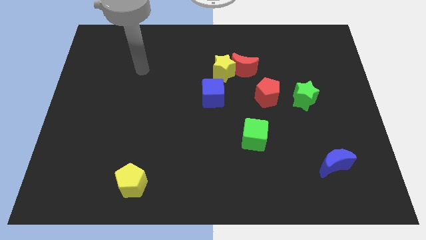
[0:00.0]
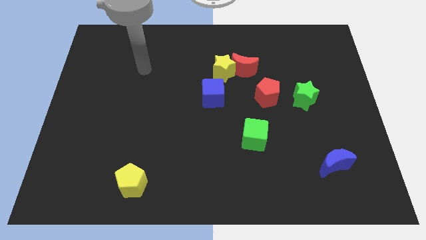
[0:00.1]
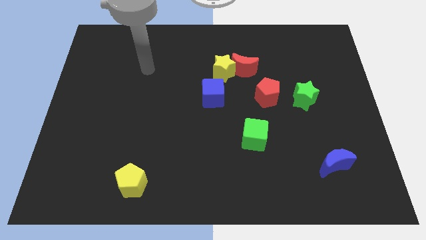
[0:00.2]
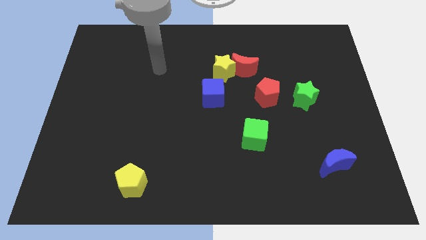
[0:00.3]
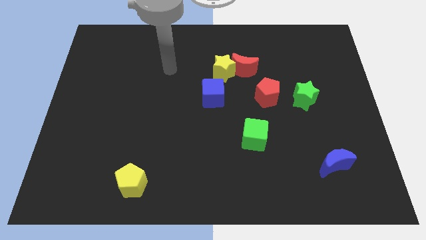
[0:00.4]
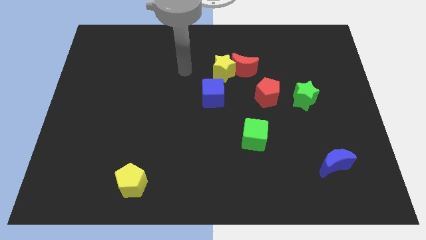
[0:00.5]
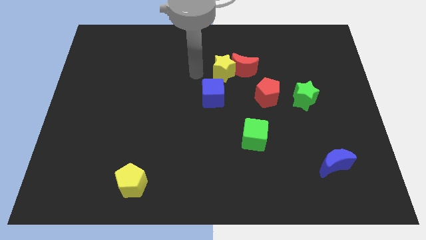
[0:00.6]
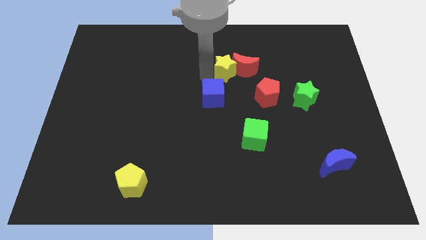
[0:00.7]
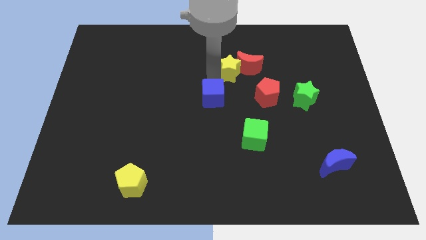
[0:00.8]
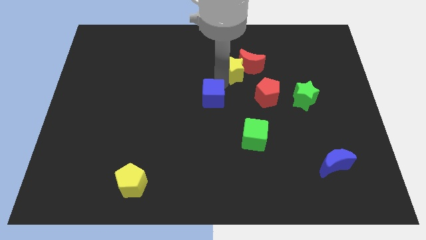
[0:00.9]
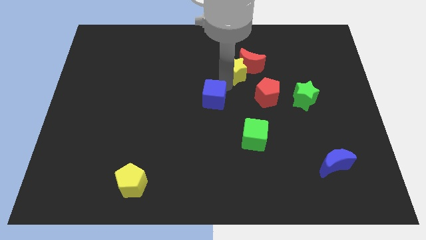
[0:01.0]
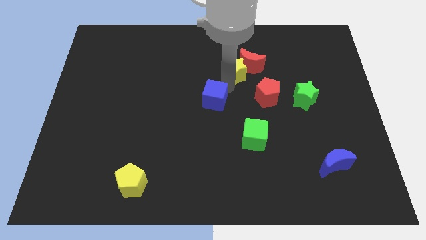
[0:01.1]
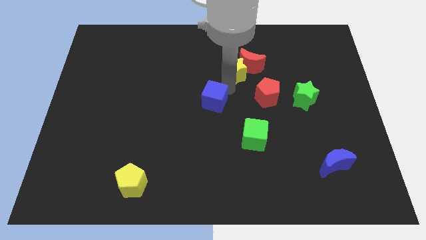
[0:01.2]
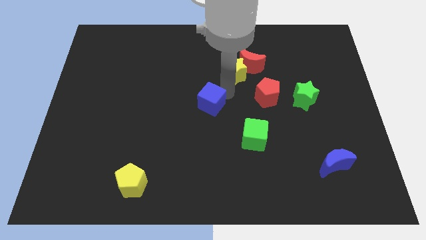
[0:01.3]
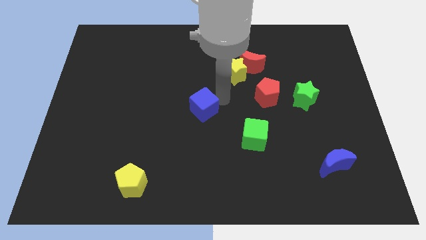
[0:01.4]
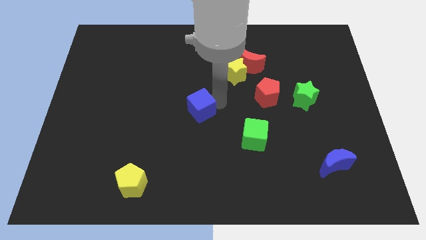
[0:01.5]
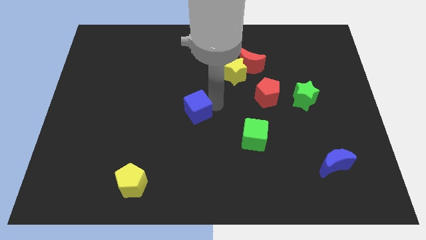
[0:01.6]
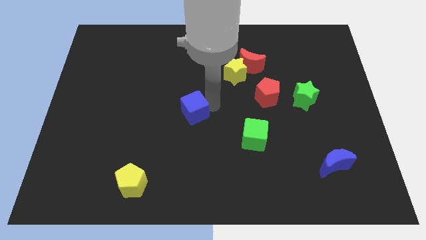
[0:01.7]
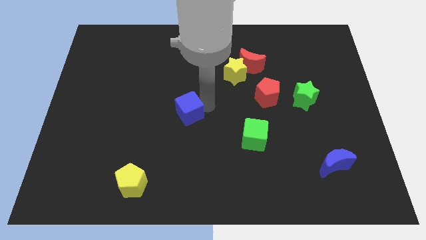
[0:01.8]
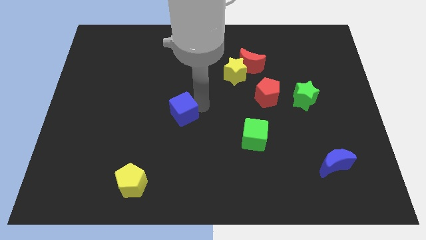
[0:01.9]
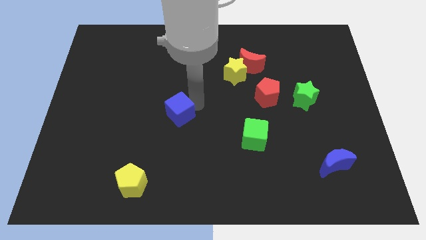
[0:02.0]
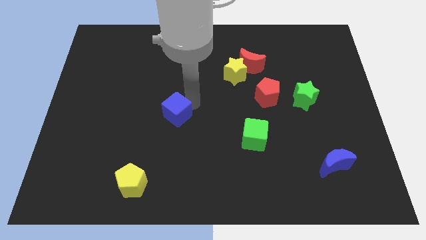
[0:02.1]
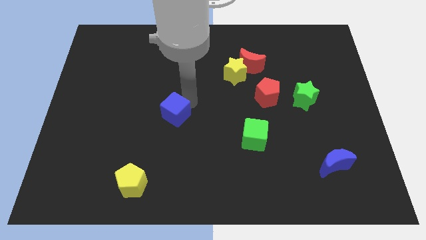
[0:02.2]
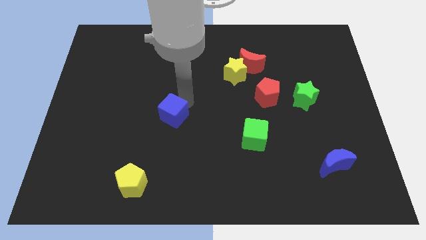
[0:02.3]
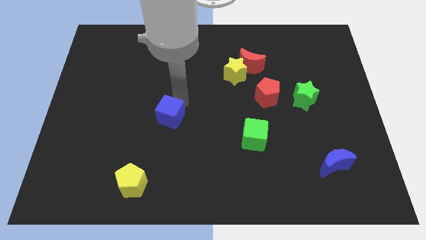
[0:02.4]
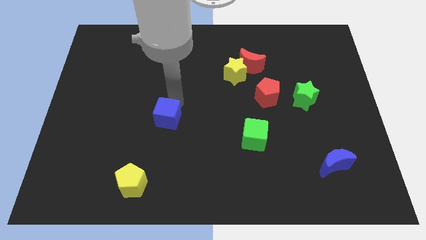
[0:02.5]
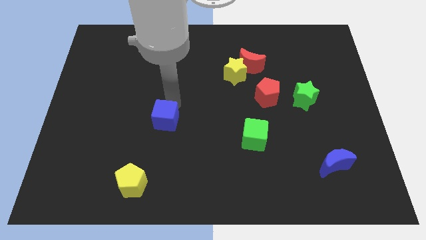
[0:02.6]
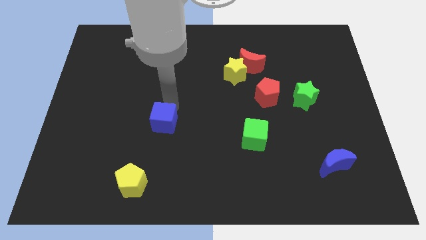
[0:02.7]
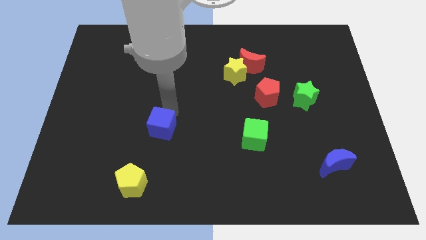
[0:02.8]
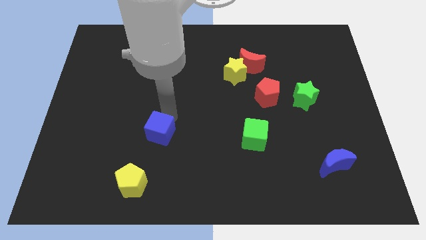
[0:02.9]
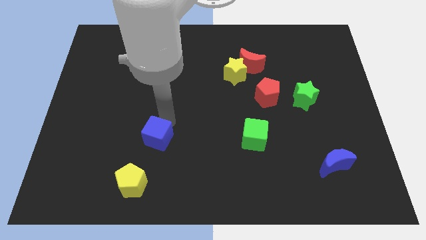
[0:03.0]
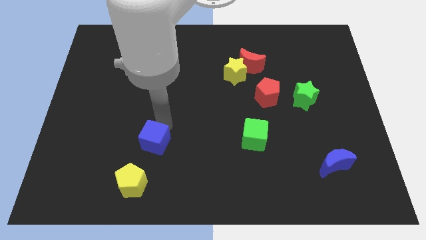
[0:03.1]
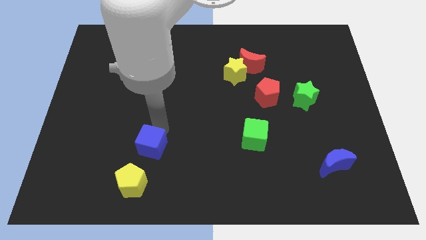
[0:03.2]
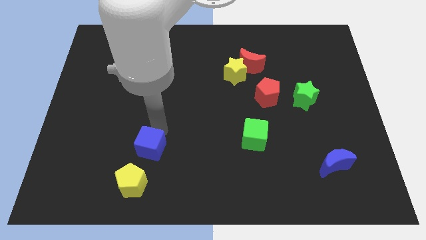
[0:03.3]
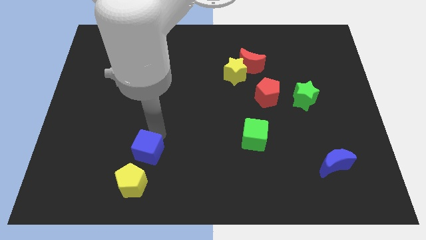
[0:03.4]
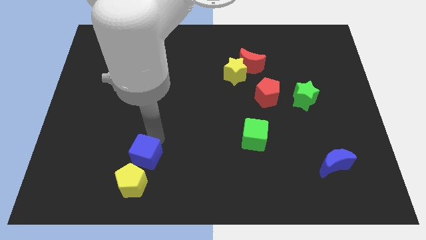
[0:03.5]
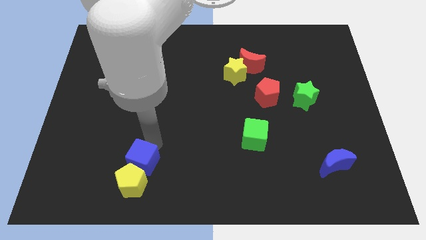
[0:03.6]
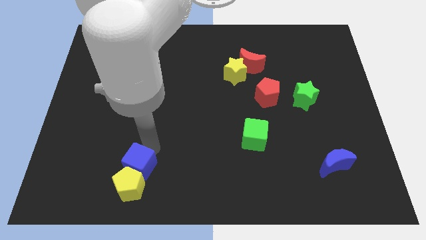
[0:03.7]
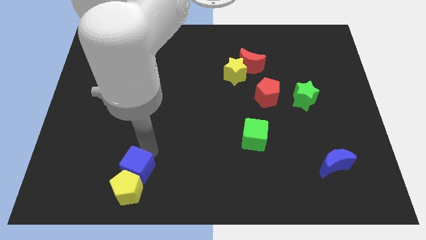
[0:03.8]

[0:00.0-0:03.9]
move the blue cube close to the yellow pentagon

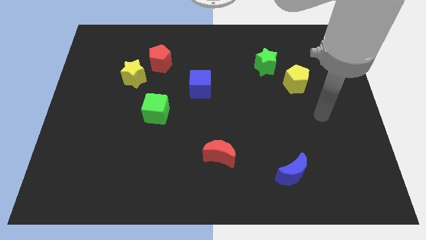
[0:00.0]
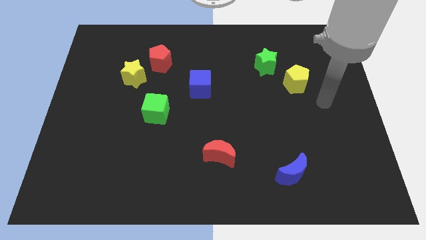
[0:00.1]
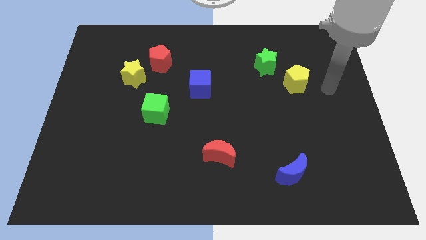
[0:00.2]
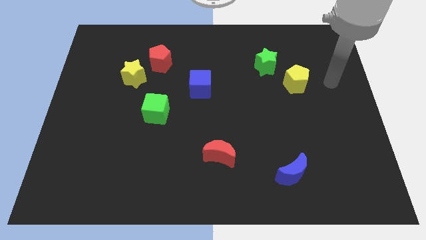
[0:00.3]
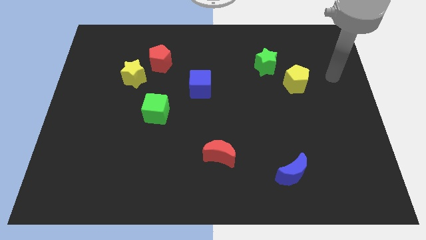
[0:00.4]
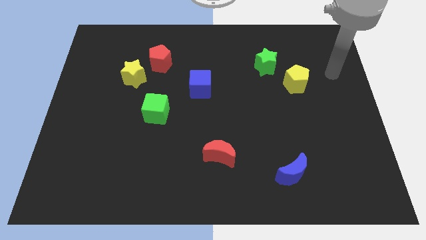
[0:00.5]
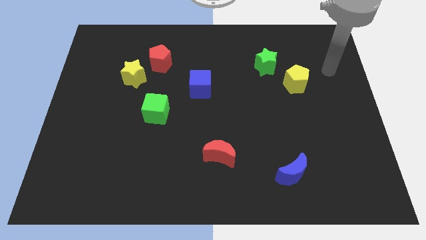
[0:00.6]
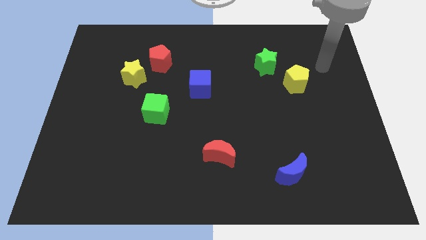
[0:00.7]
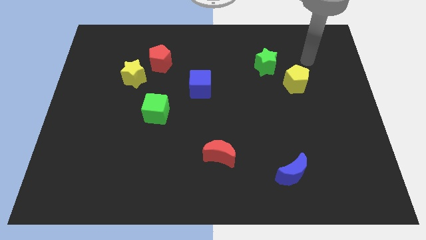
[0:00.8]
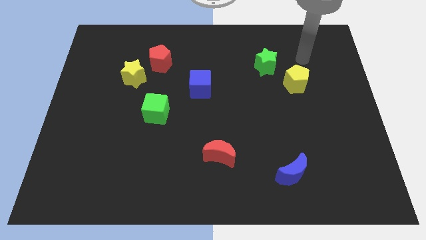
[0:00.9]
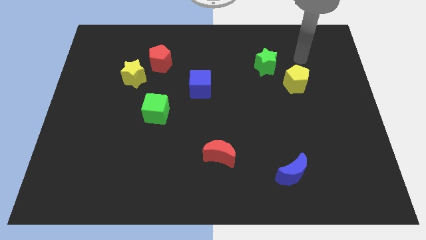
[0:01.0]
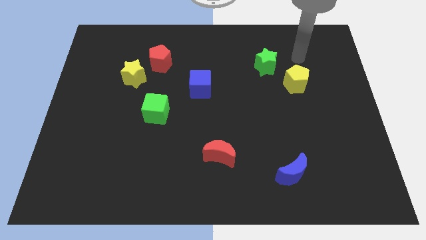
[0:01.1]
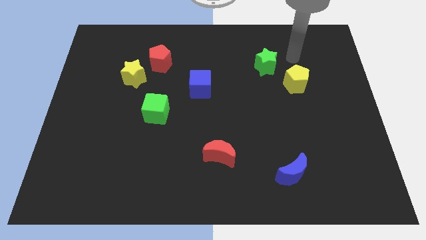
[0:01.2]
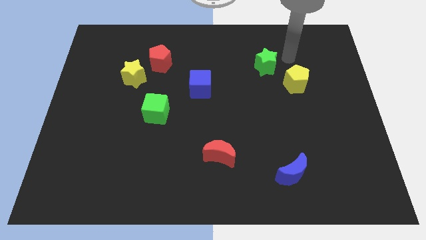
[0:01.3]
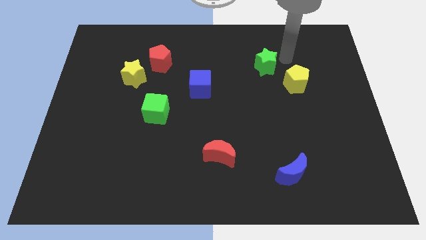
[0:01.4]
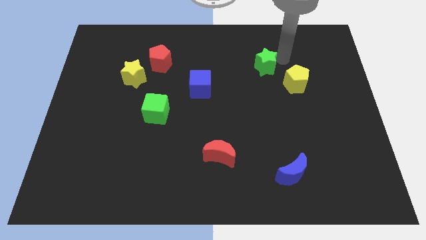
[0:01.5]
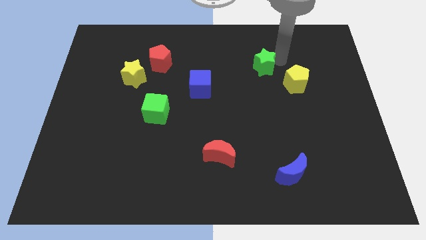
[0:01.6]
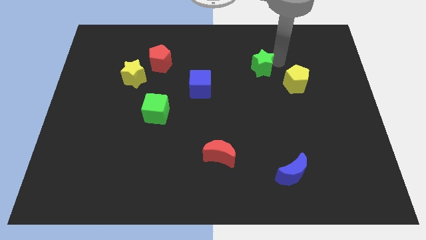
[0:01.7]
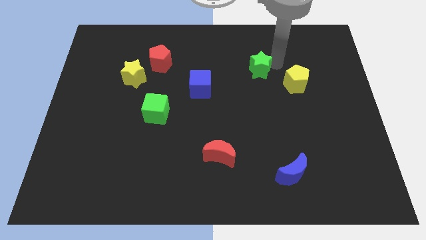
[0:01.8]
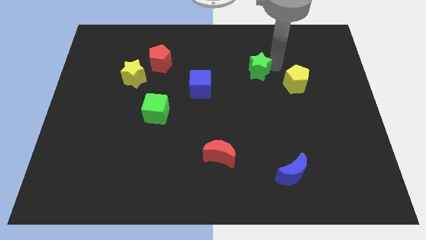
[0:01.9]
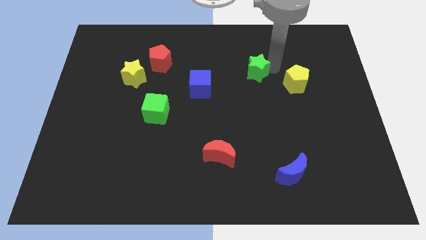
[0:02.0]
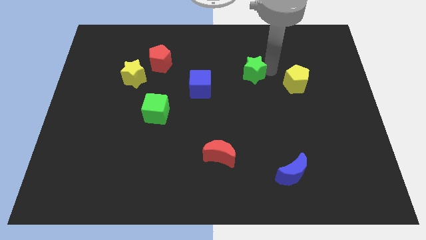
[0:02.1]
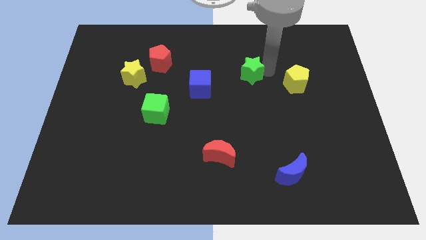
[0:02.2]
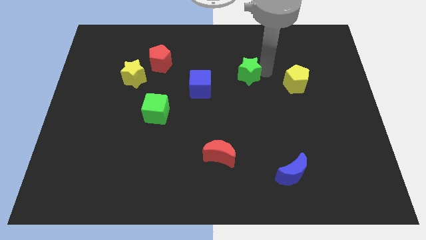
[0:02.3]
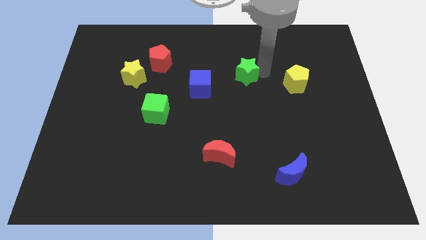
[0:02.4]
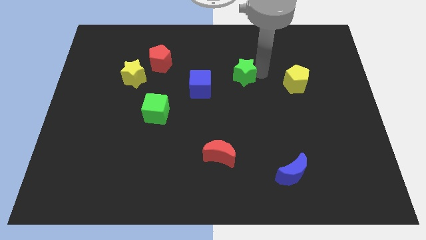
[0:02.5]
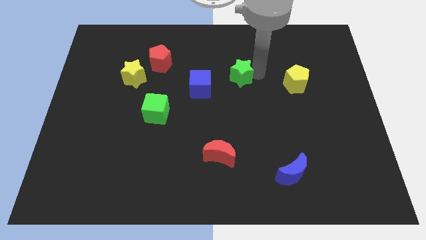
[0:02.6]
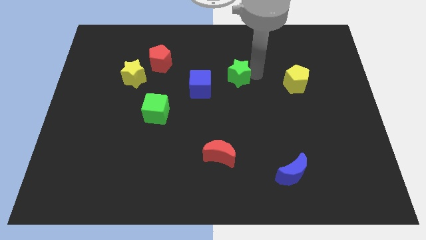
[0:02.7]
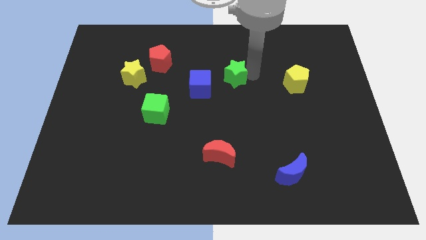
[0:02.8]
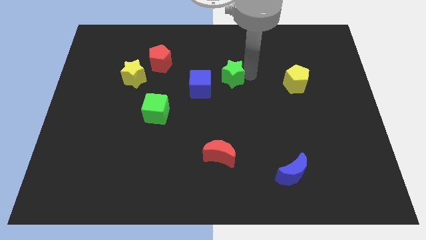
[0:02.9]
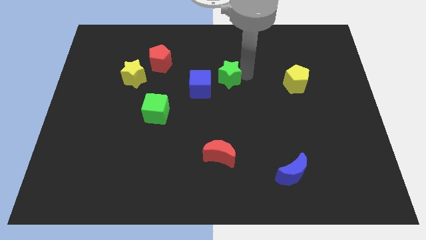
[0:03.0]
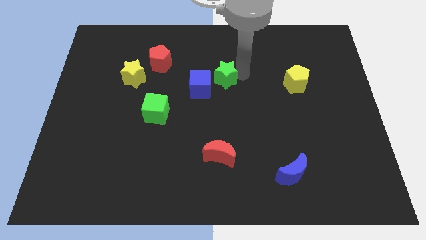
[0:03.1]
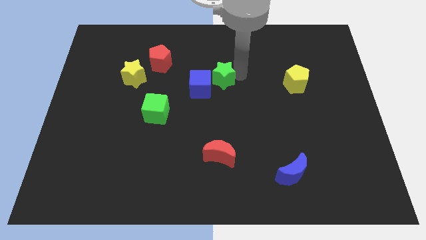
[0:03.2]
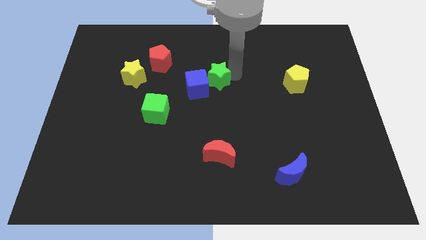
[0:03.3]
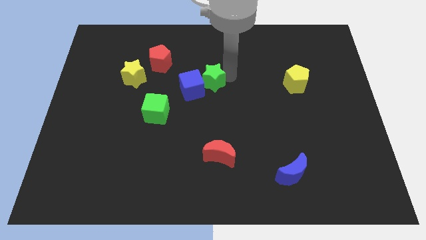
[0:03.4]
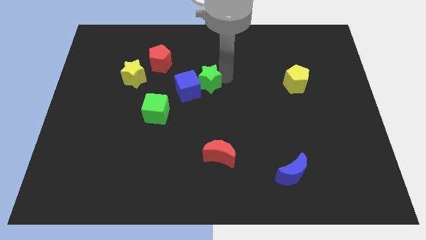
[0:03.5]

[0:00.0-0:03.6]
put the green star next to the blue cube

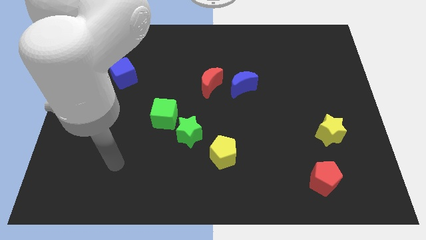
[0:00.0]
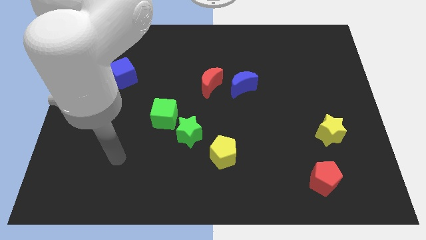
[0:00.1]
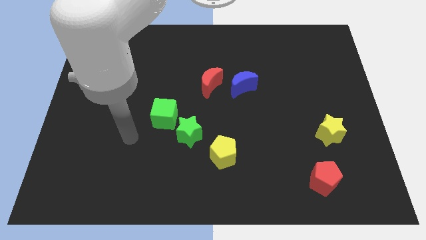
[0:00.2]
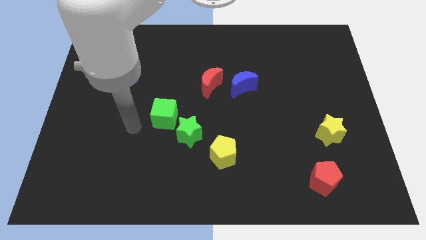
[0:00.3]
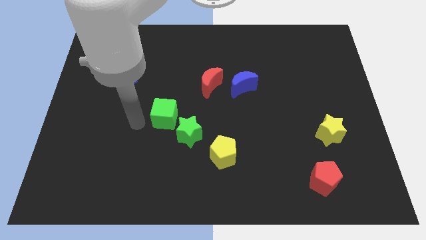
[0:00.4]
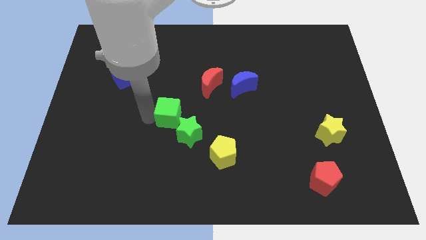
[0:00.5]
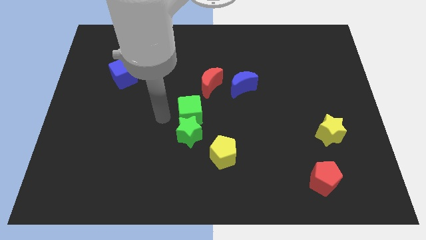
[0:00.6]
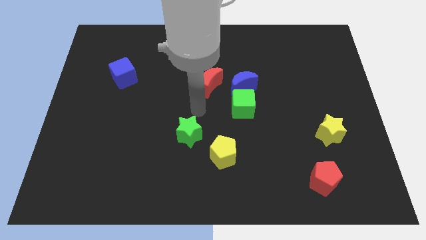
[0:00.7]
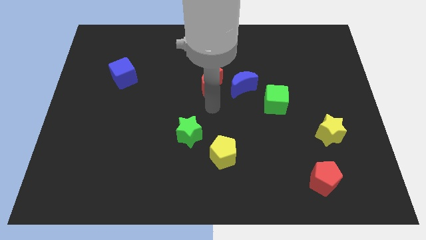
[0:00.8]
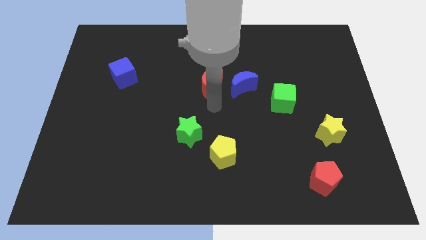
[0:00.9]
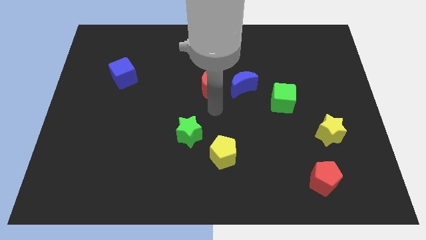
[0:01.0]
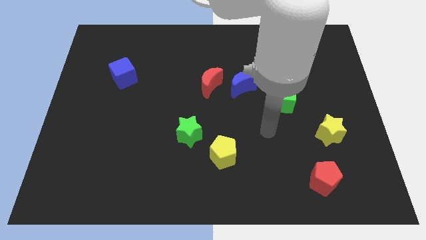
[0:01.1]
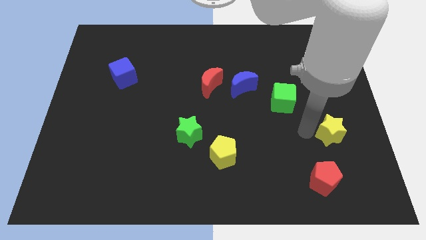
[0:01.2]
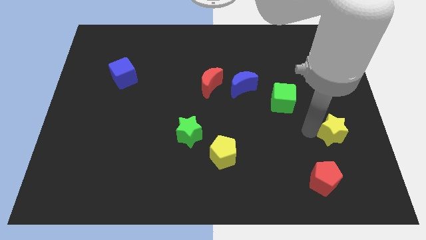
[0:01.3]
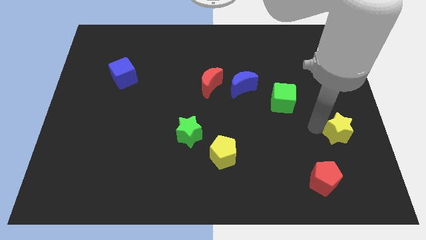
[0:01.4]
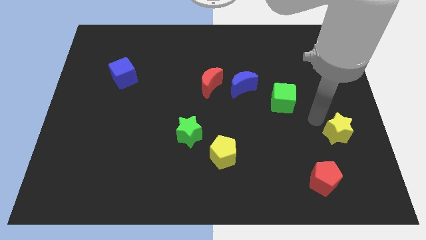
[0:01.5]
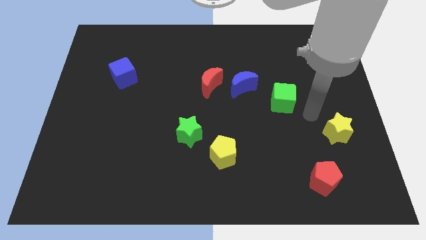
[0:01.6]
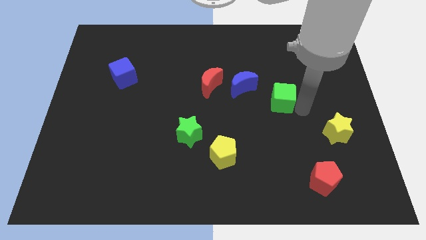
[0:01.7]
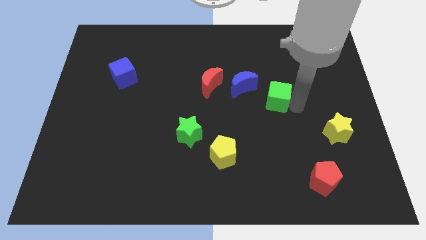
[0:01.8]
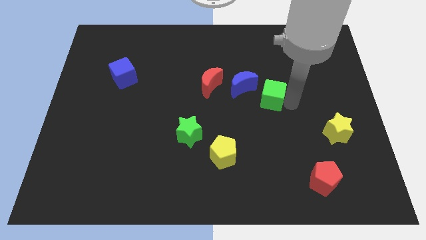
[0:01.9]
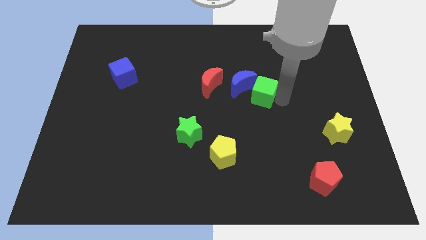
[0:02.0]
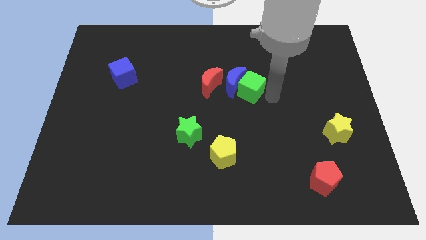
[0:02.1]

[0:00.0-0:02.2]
put the green cube towards the blue moon
